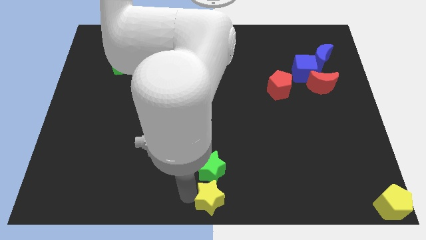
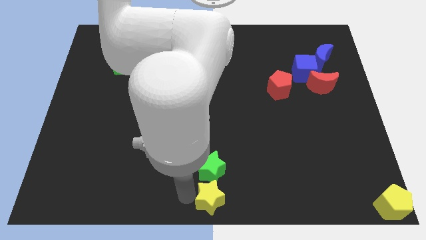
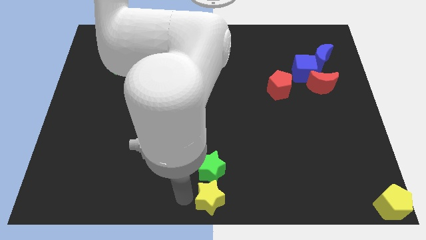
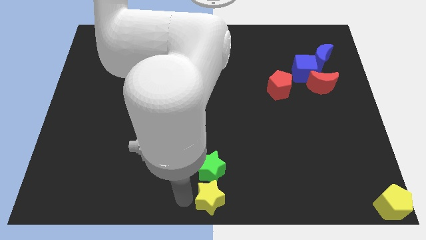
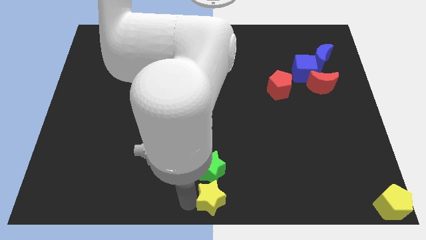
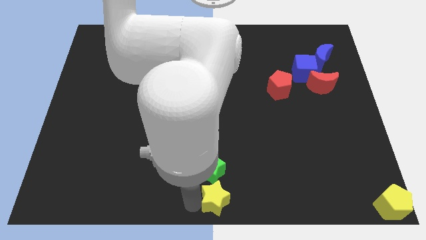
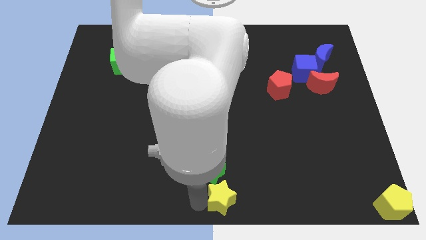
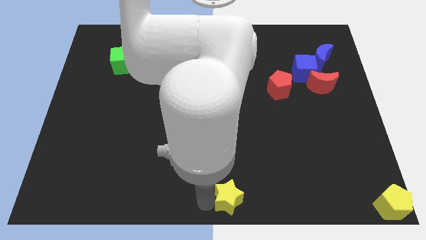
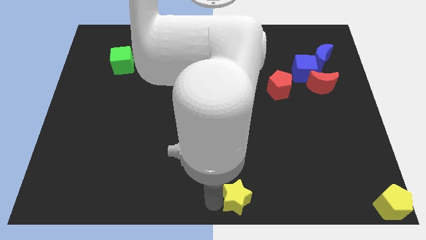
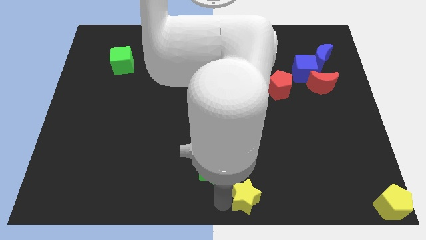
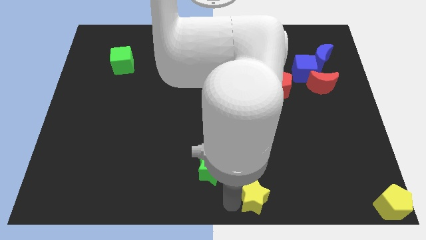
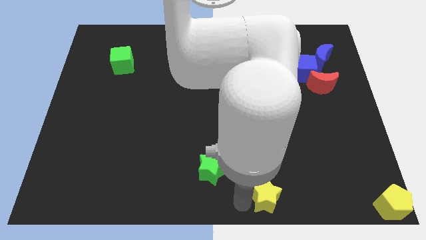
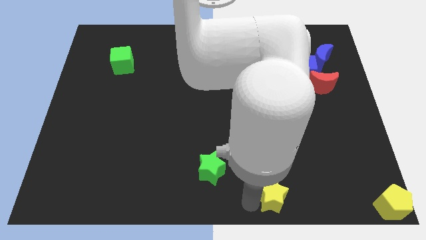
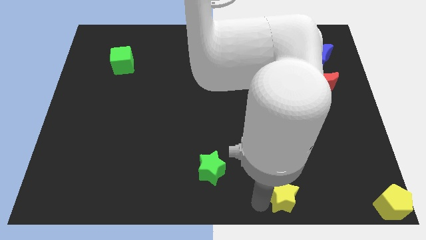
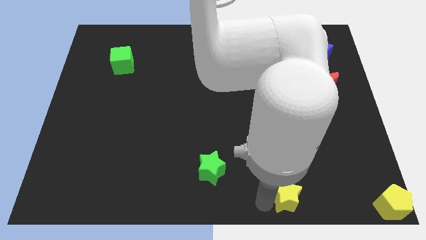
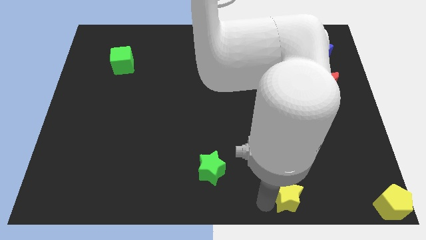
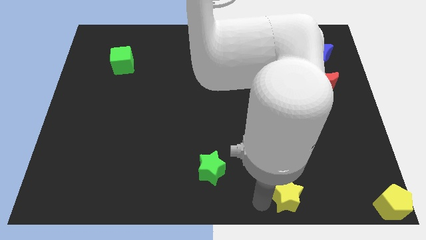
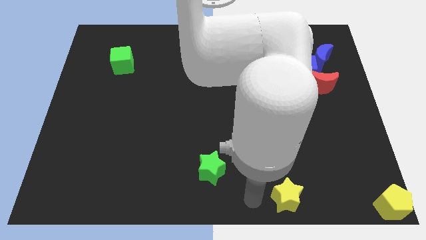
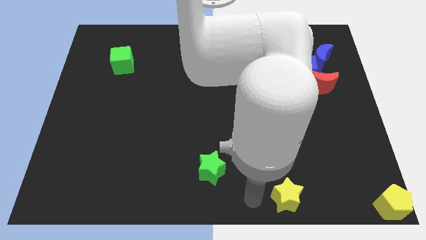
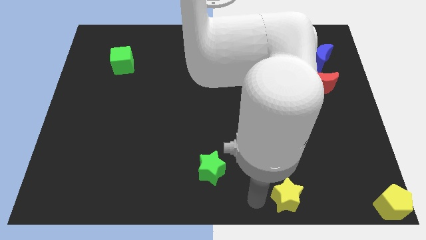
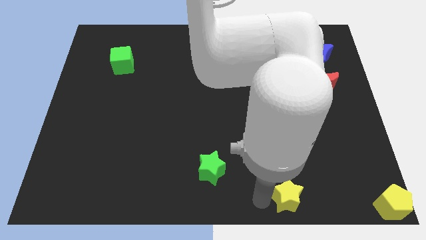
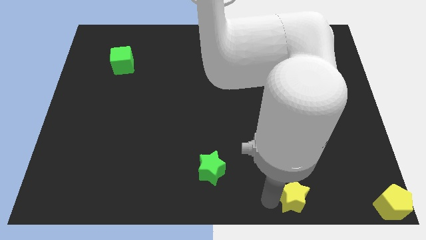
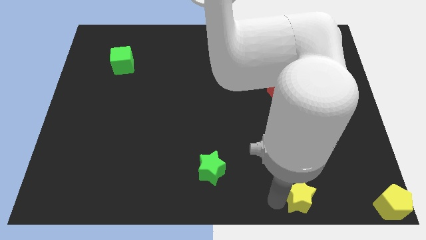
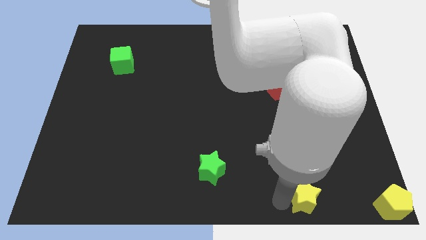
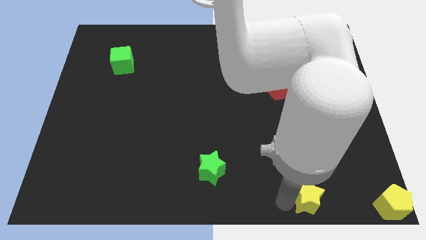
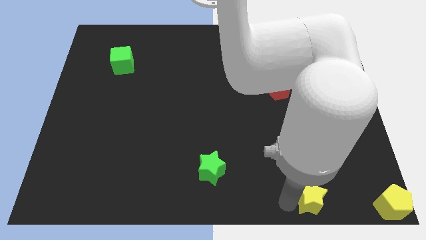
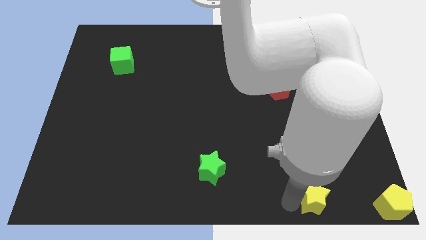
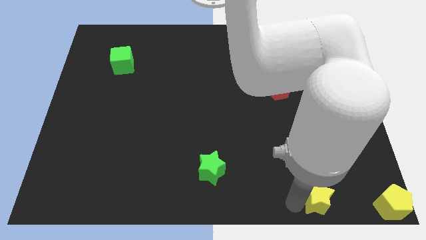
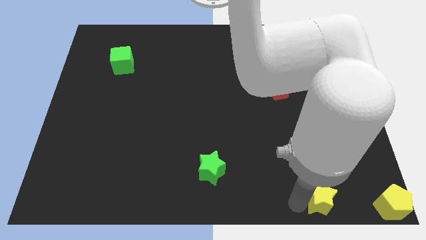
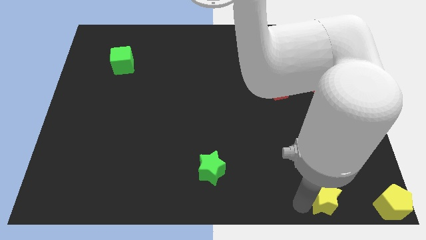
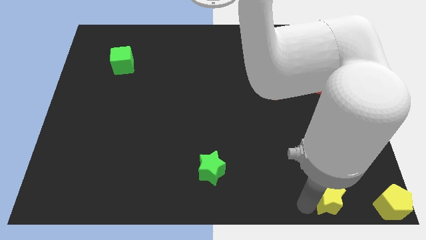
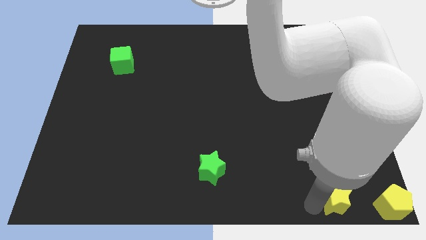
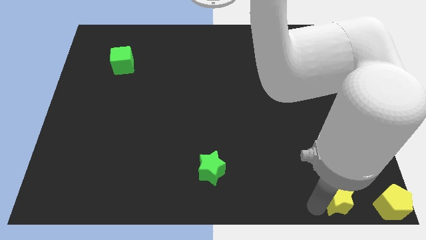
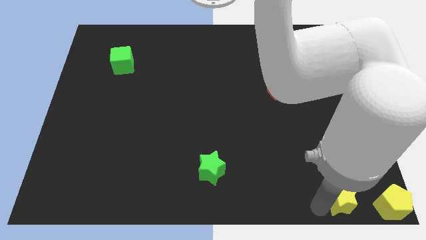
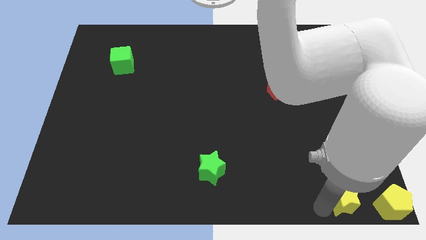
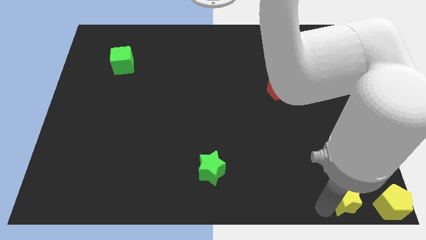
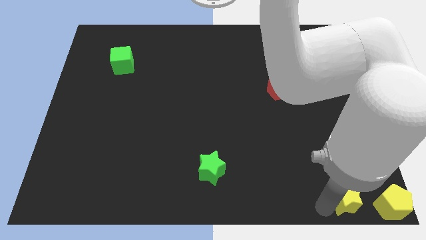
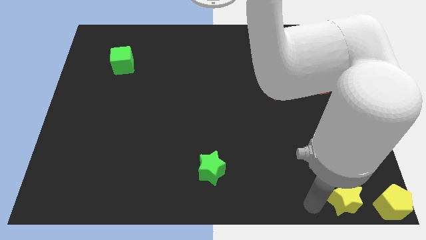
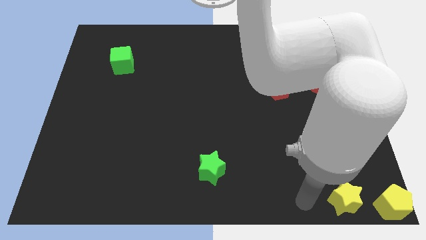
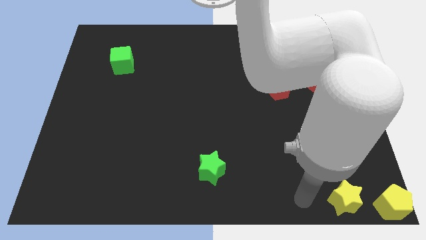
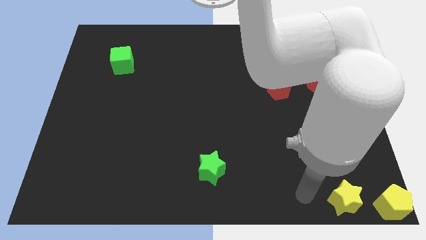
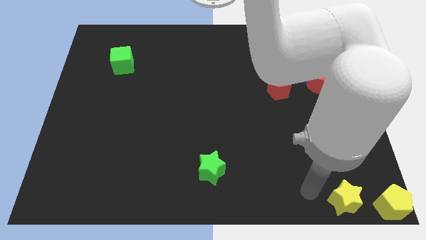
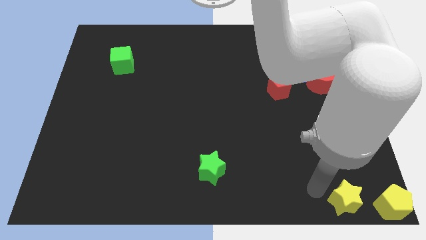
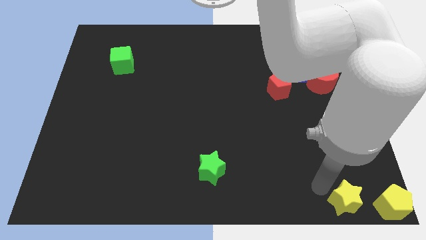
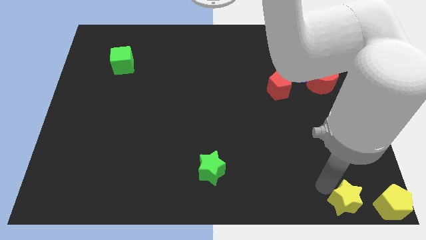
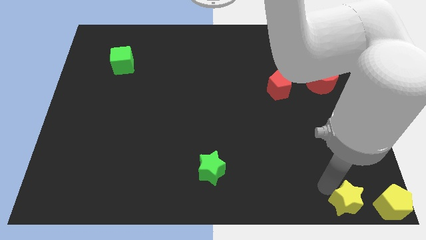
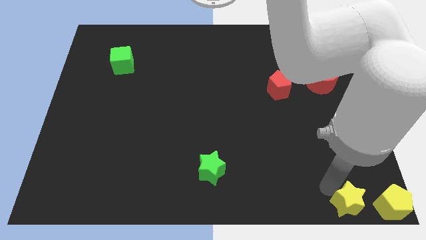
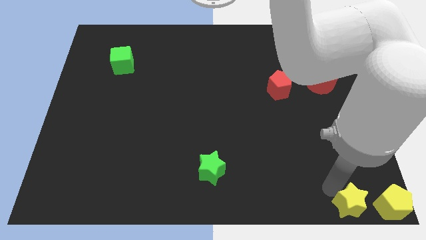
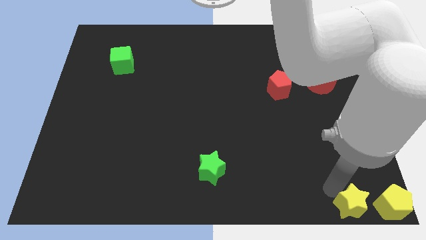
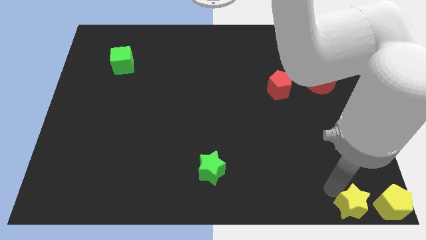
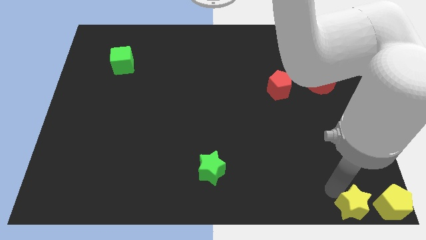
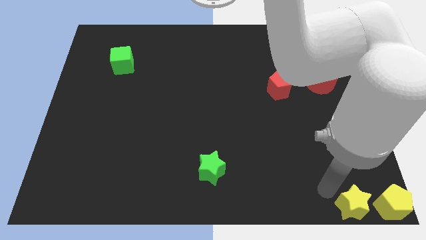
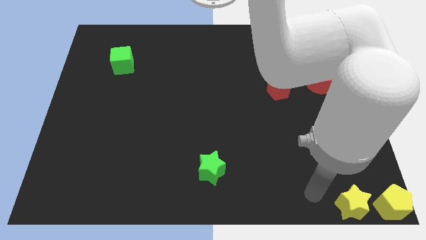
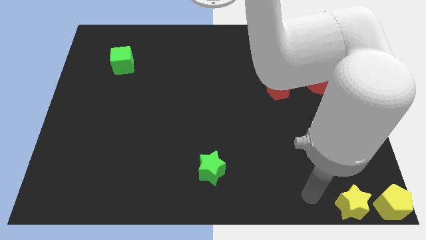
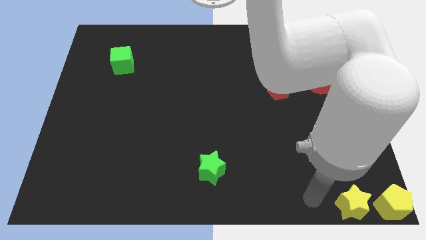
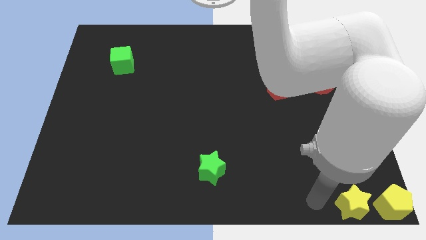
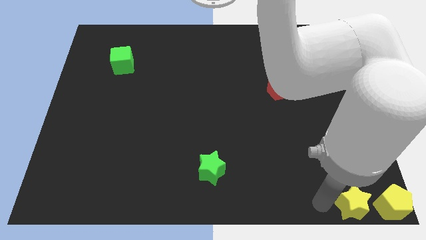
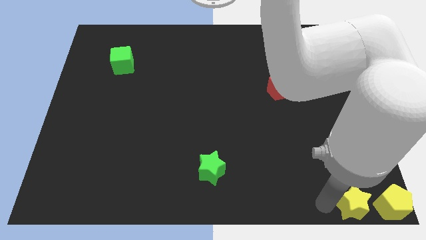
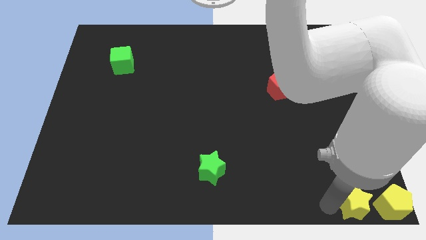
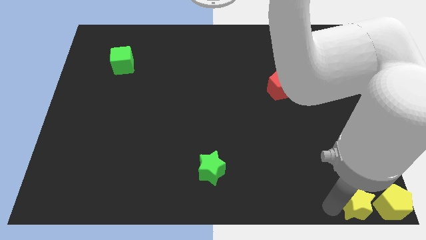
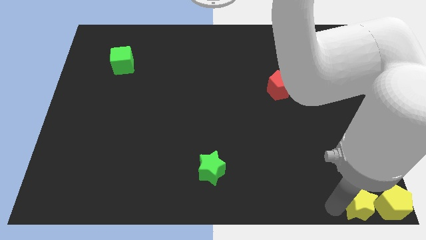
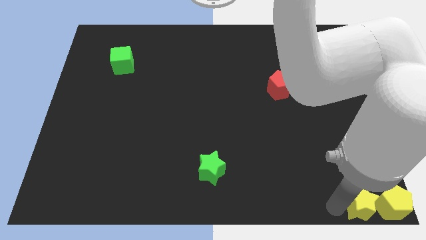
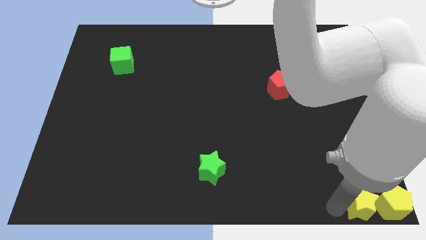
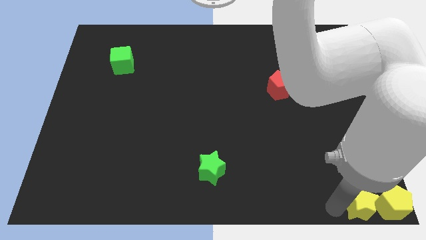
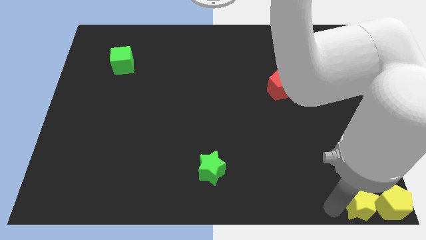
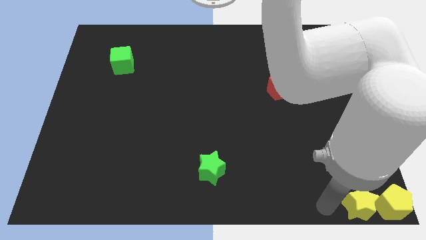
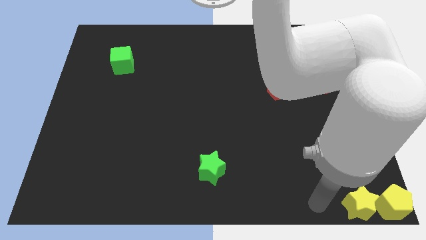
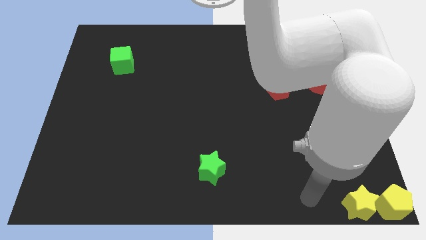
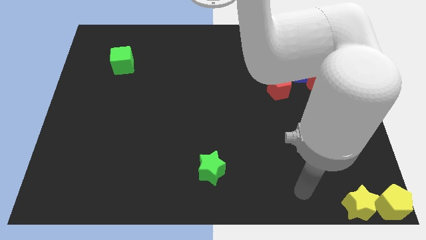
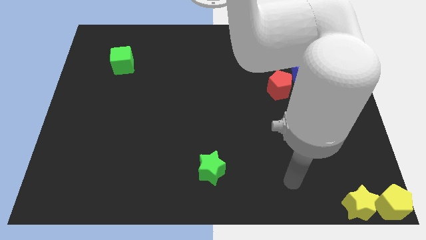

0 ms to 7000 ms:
slide the yellow star close to the yellow pentagon

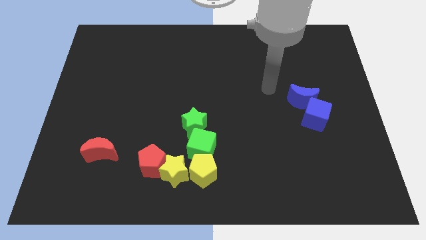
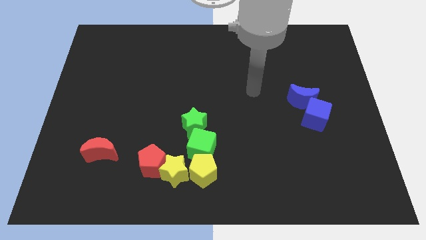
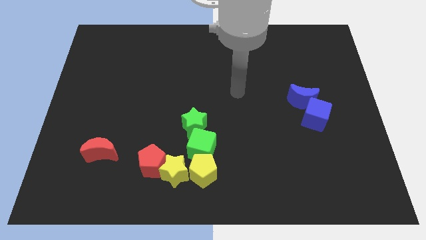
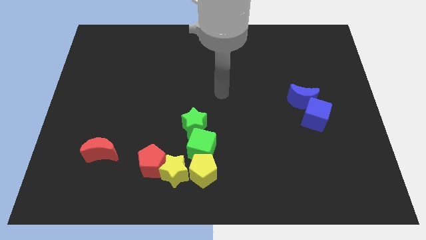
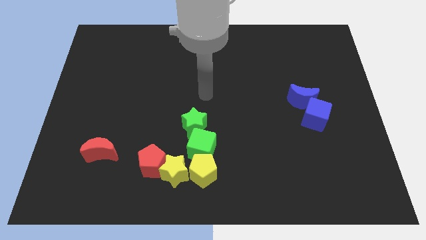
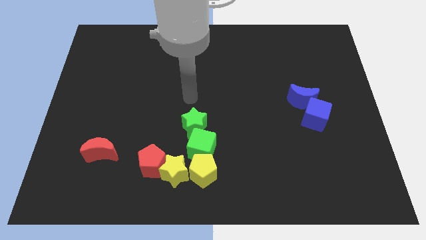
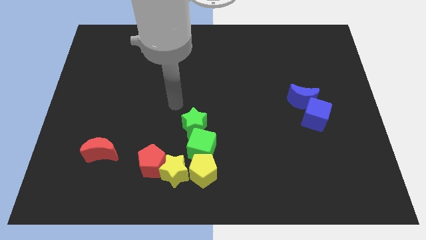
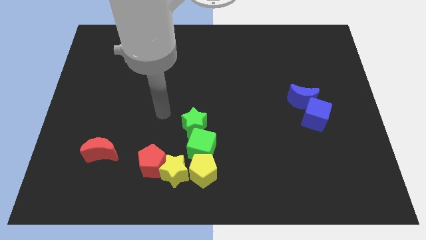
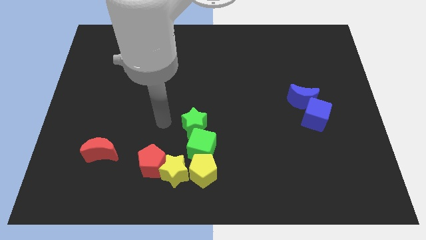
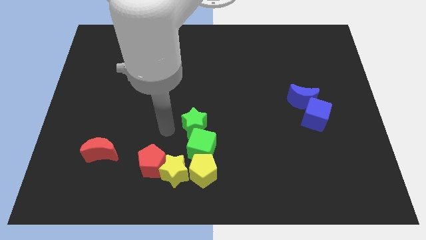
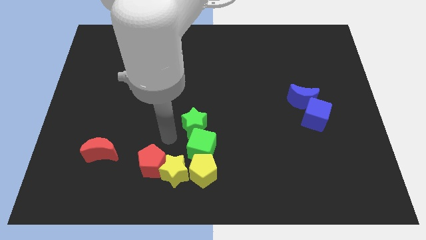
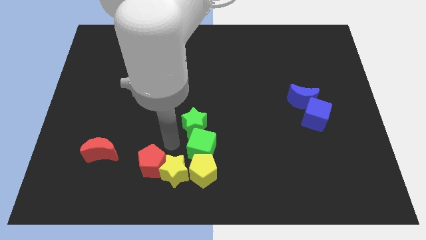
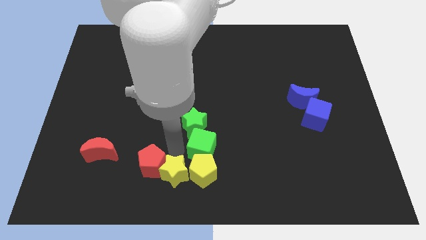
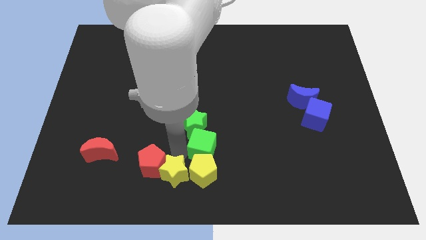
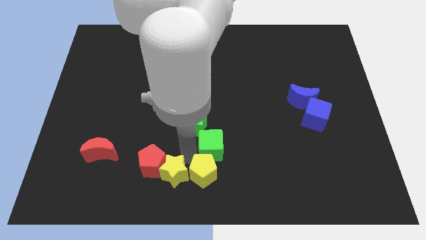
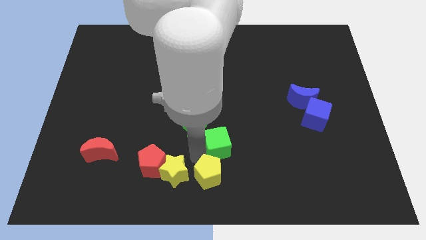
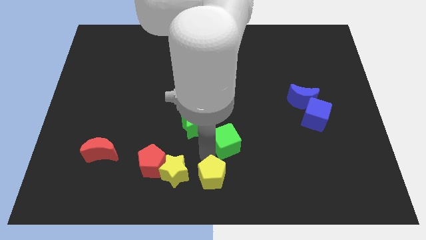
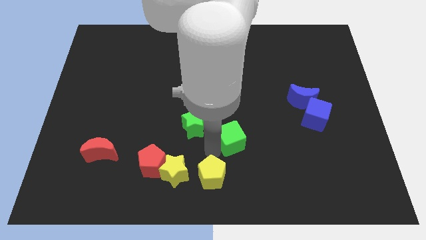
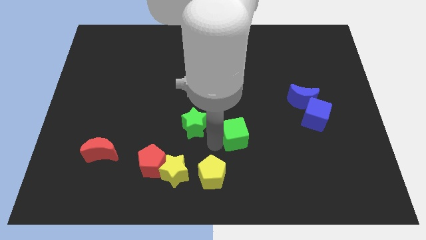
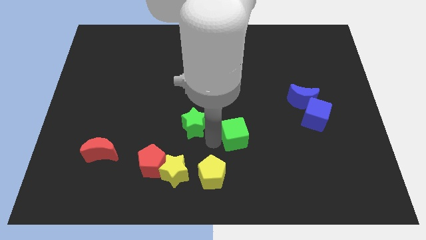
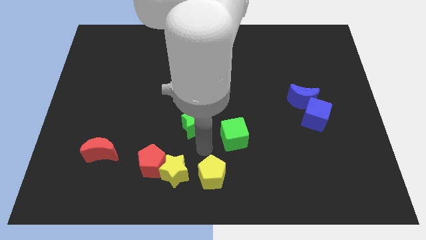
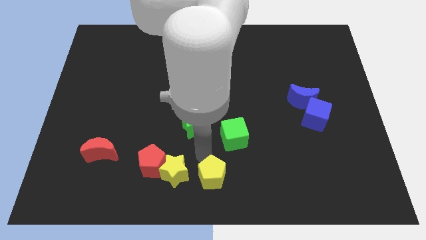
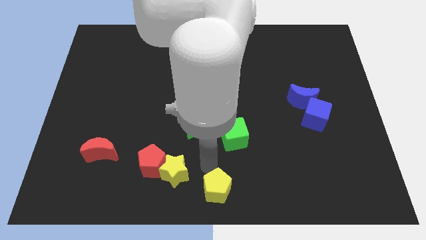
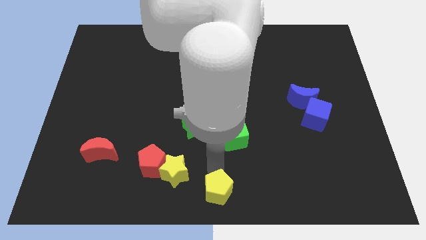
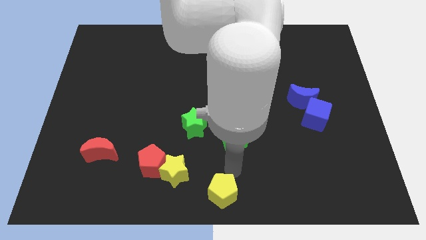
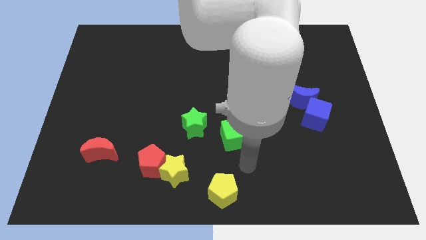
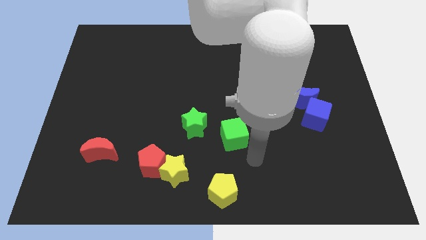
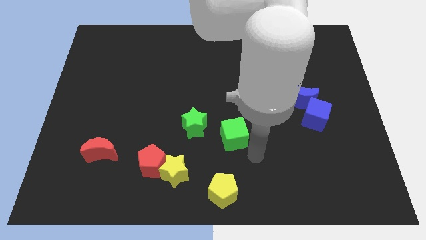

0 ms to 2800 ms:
move the yellow pentagon to the bottom of the board
